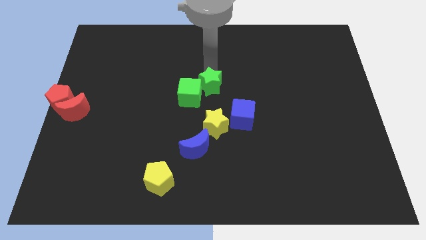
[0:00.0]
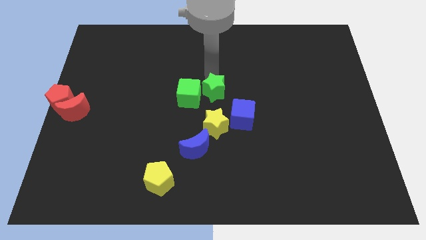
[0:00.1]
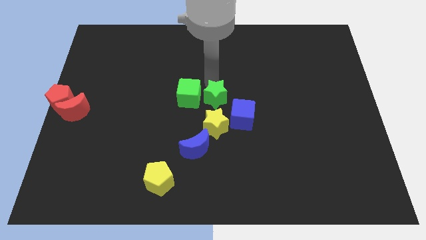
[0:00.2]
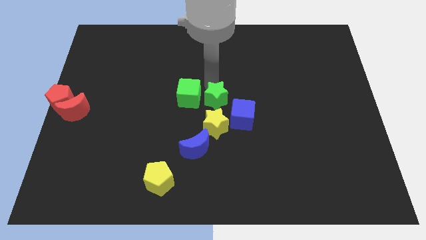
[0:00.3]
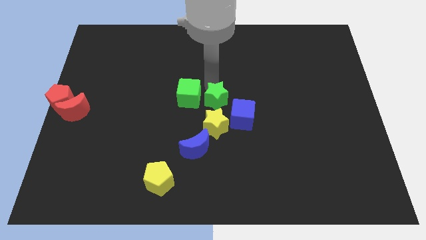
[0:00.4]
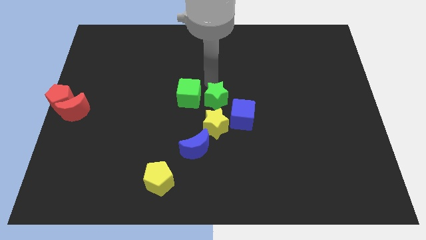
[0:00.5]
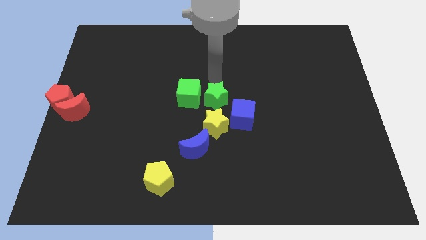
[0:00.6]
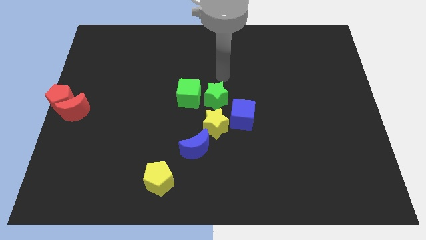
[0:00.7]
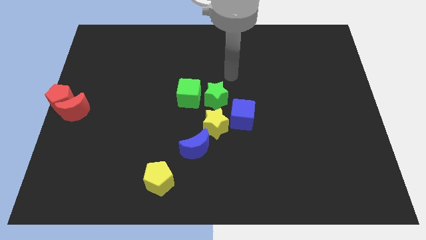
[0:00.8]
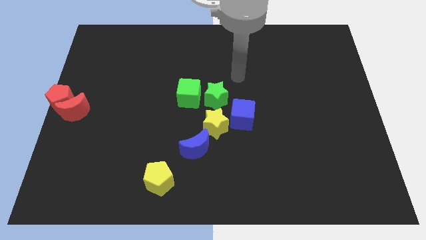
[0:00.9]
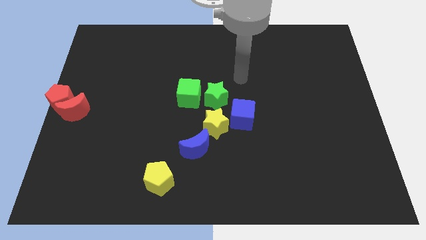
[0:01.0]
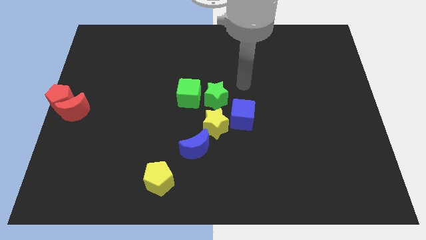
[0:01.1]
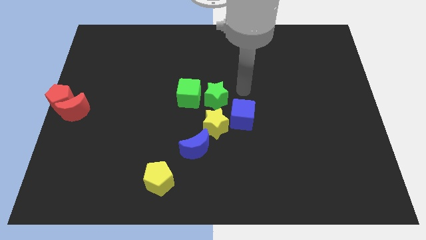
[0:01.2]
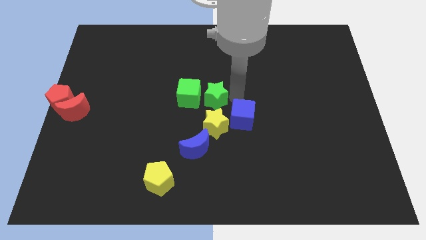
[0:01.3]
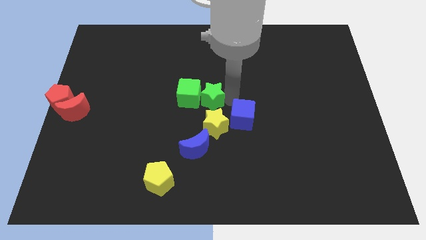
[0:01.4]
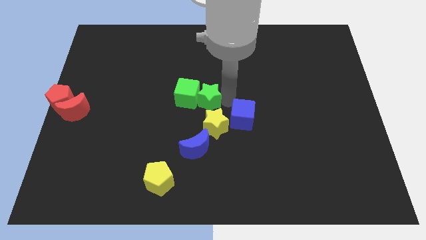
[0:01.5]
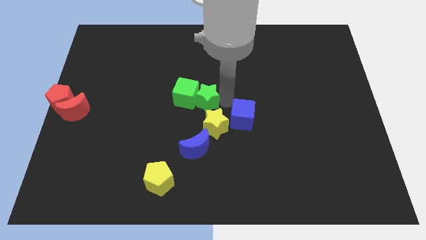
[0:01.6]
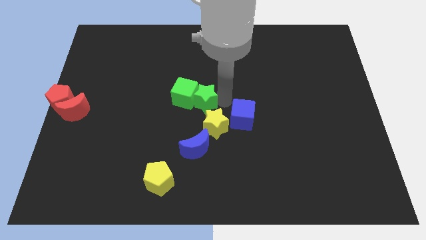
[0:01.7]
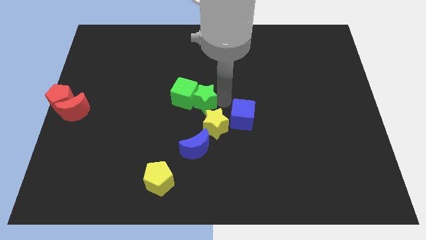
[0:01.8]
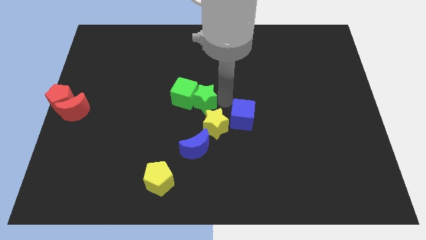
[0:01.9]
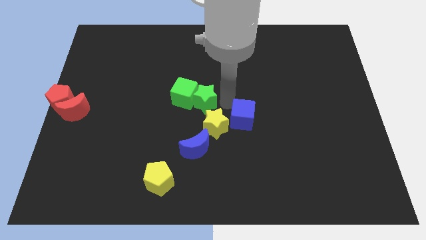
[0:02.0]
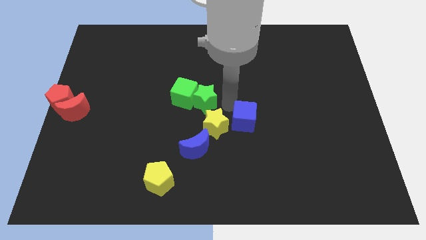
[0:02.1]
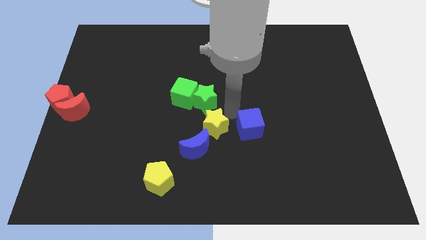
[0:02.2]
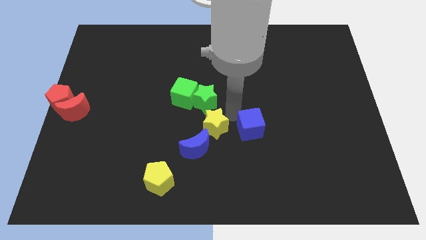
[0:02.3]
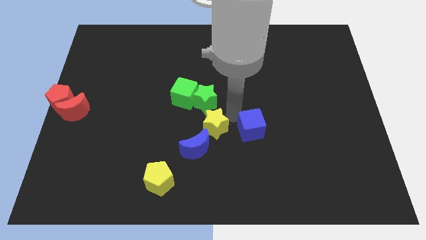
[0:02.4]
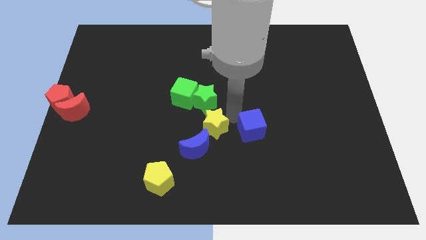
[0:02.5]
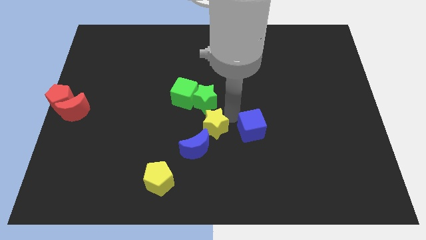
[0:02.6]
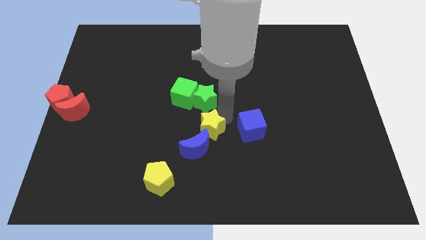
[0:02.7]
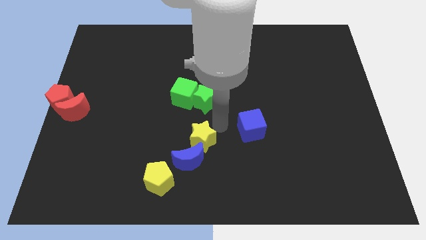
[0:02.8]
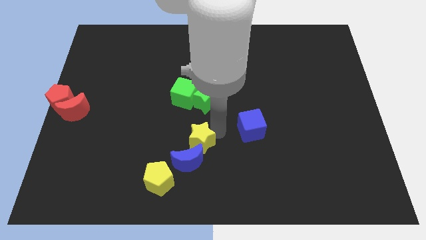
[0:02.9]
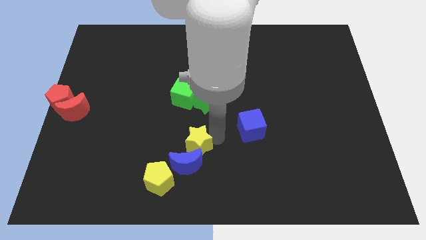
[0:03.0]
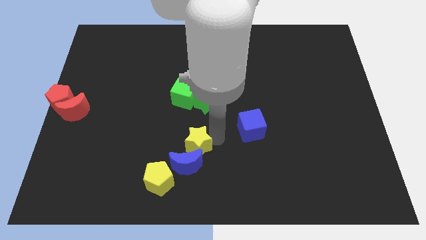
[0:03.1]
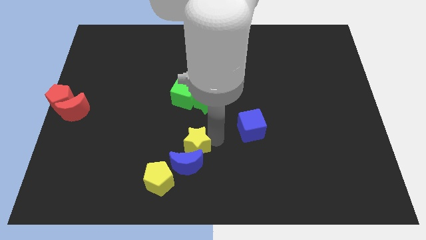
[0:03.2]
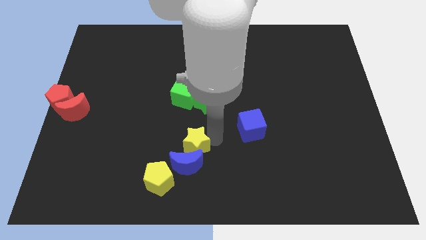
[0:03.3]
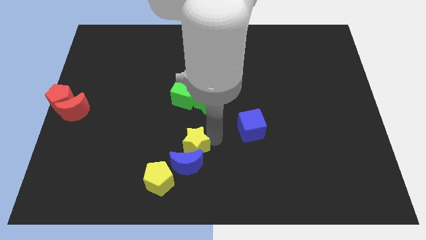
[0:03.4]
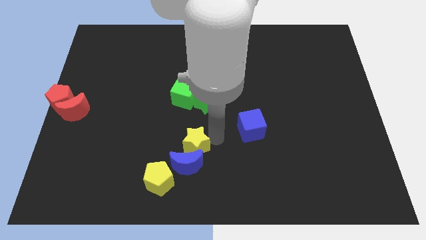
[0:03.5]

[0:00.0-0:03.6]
push the yellow star into the blue moon

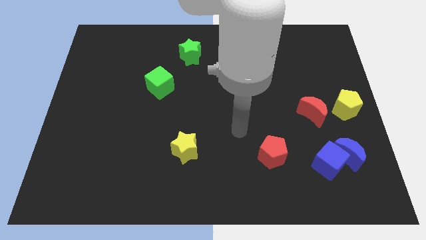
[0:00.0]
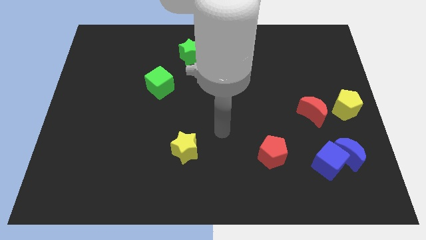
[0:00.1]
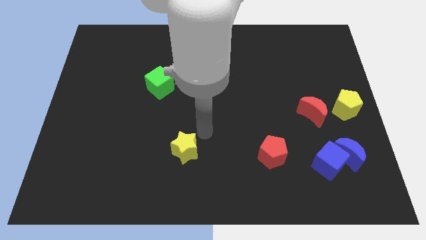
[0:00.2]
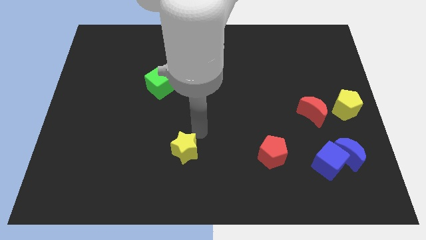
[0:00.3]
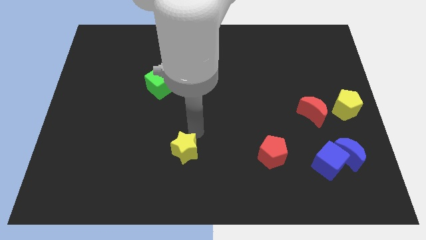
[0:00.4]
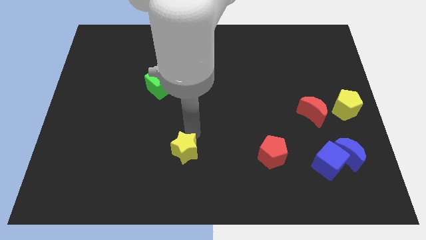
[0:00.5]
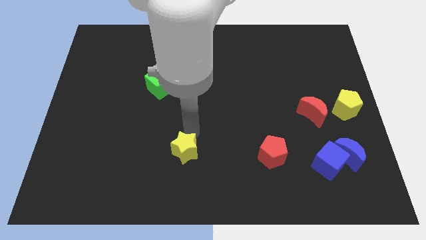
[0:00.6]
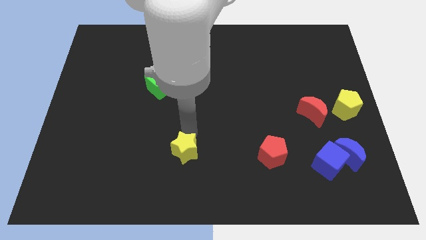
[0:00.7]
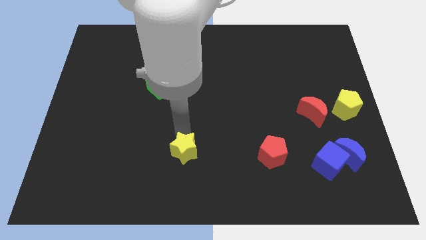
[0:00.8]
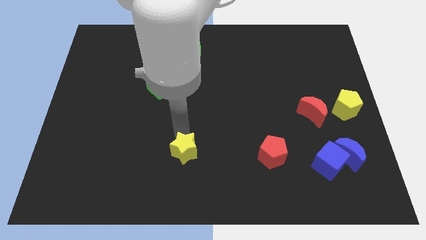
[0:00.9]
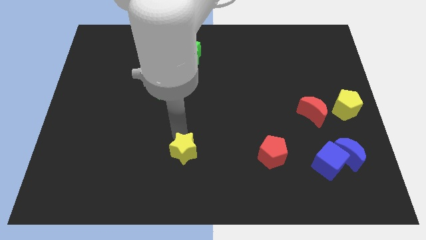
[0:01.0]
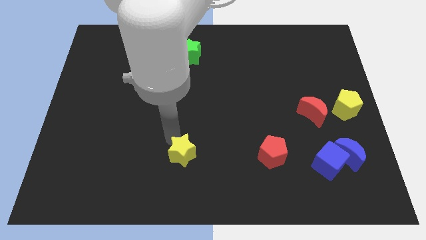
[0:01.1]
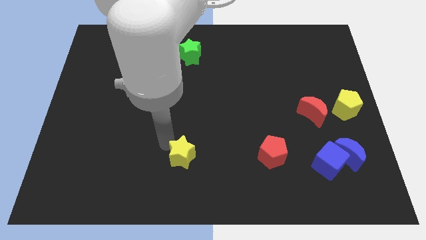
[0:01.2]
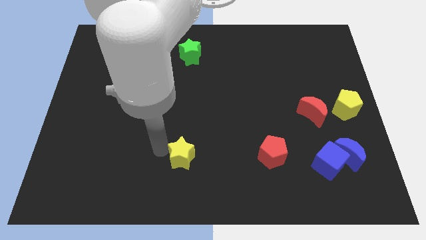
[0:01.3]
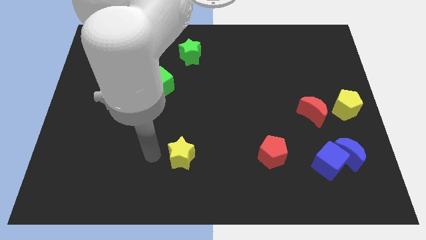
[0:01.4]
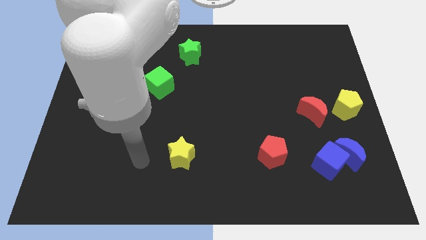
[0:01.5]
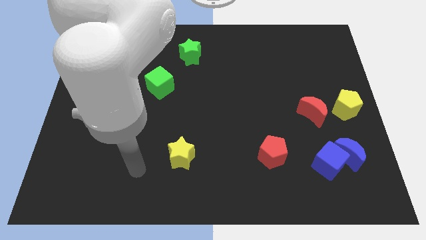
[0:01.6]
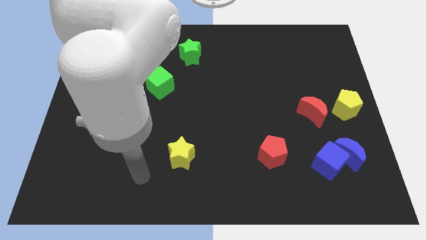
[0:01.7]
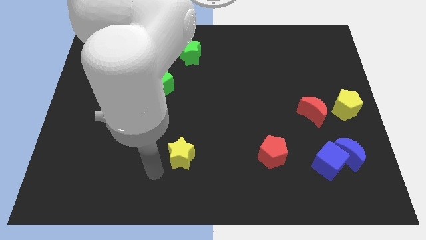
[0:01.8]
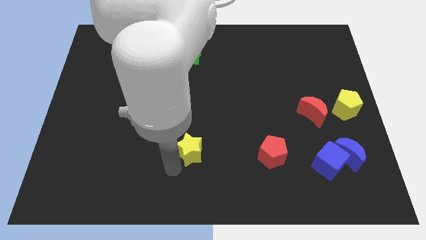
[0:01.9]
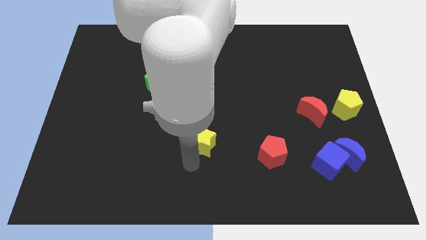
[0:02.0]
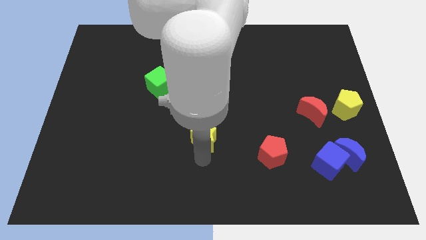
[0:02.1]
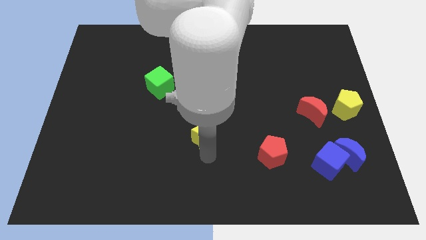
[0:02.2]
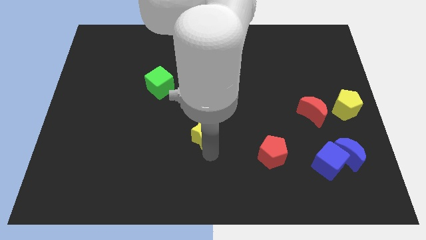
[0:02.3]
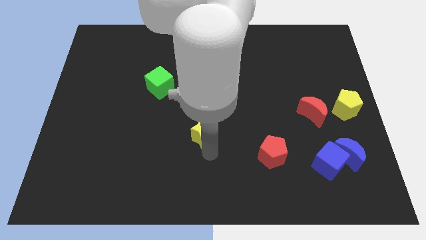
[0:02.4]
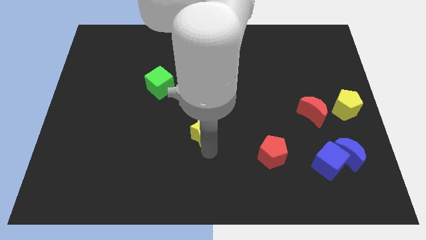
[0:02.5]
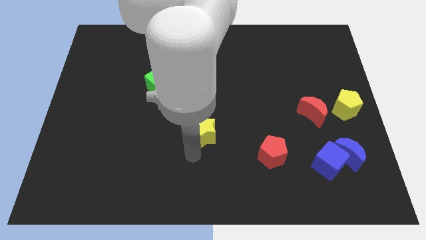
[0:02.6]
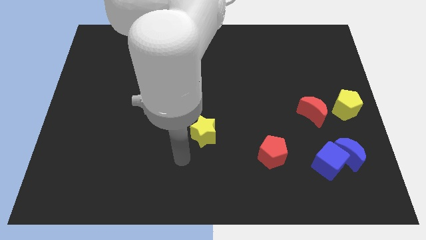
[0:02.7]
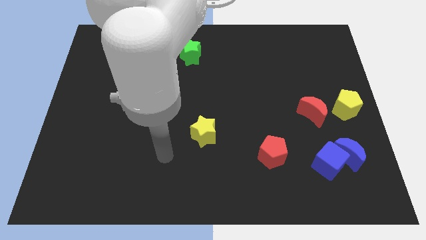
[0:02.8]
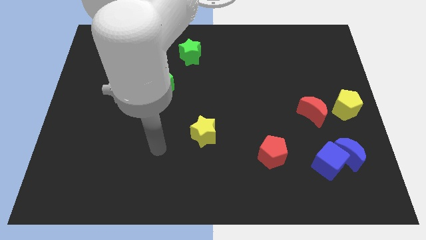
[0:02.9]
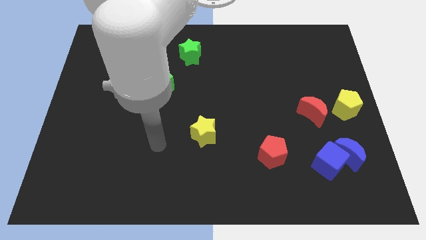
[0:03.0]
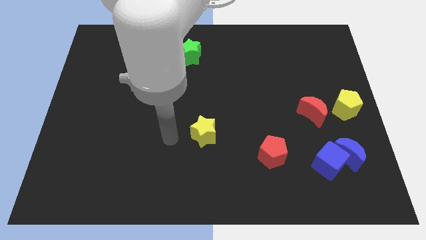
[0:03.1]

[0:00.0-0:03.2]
move the yellow star towards the top a bit

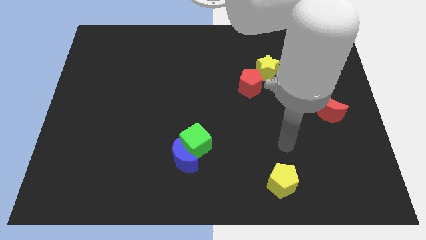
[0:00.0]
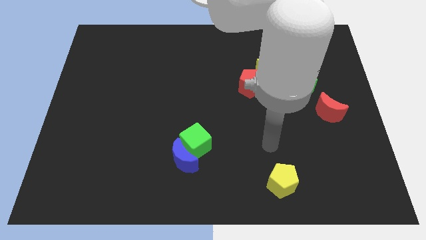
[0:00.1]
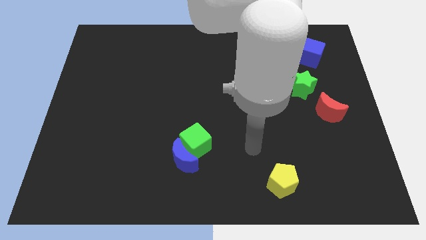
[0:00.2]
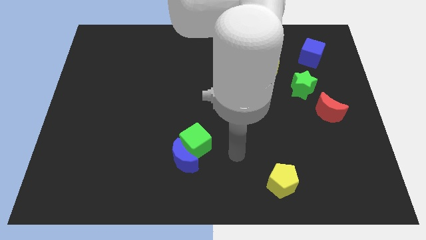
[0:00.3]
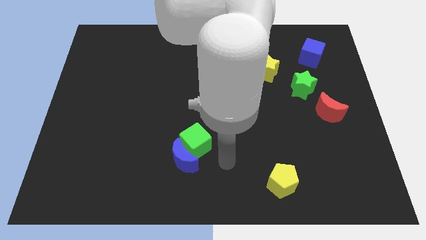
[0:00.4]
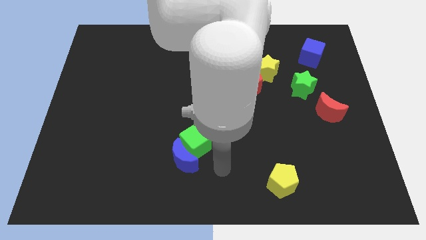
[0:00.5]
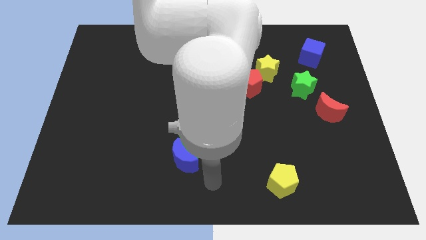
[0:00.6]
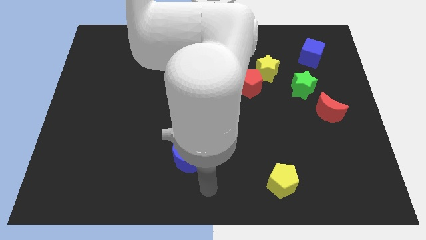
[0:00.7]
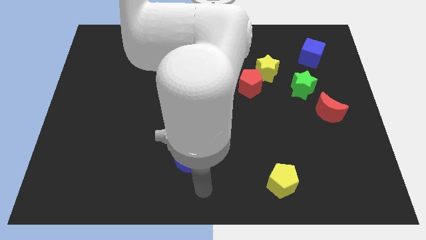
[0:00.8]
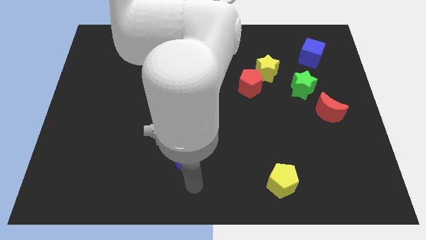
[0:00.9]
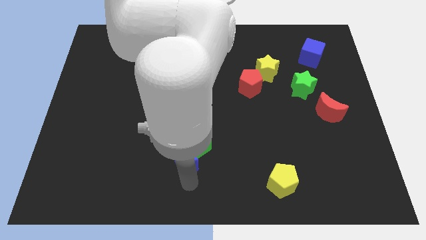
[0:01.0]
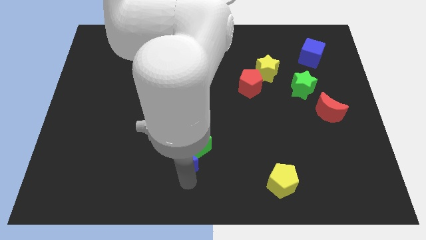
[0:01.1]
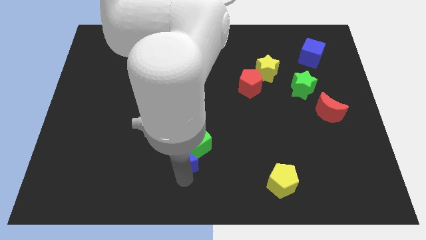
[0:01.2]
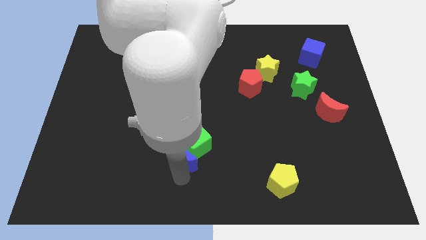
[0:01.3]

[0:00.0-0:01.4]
place arm at bottom of blue moon

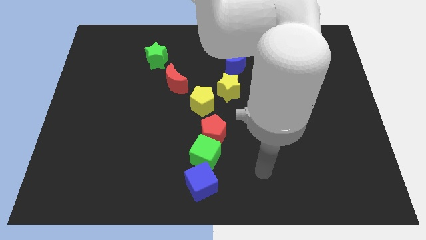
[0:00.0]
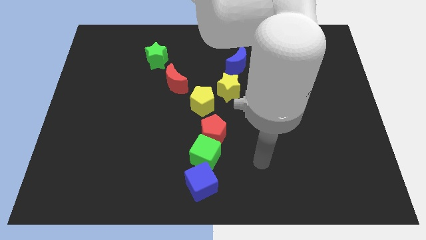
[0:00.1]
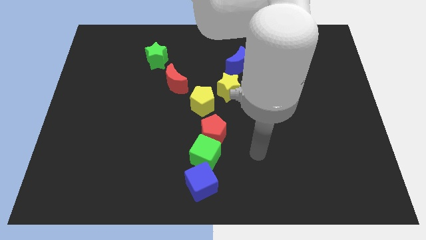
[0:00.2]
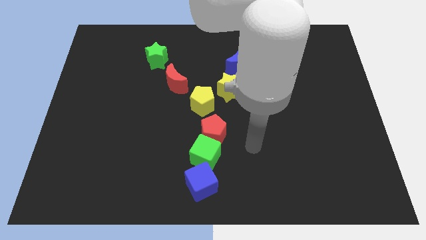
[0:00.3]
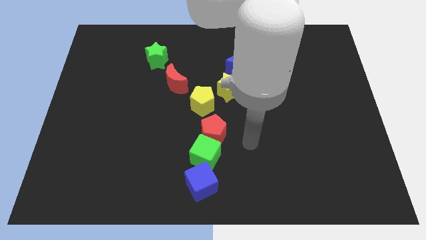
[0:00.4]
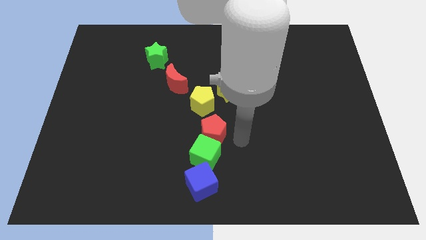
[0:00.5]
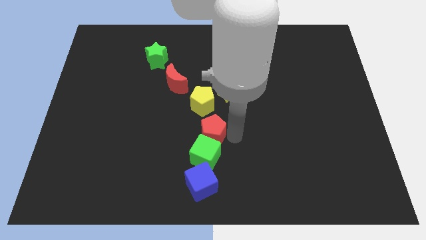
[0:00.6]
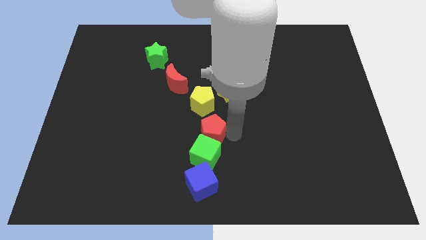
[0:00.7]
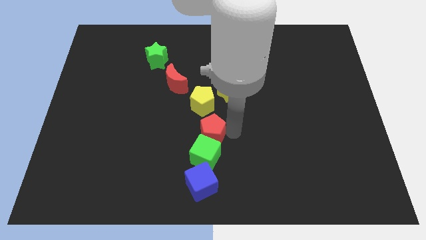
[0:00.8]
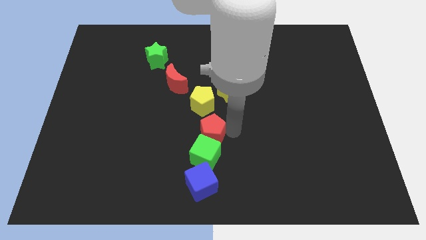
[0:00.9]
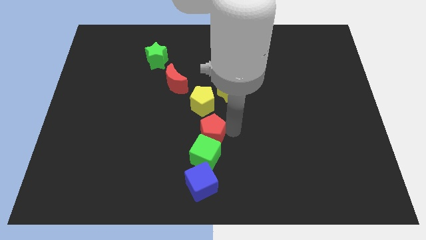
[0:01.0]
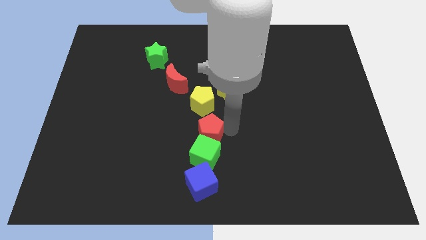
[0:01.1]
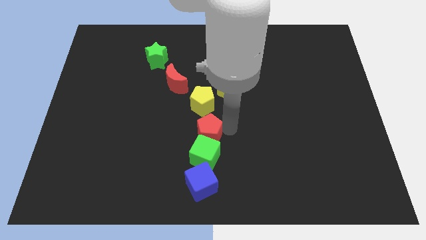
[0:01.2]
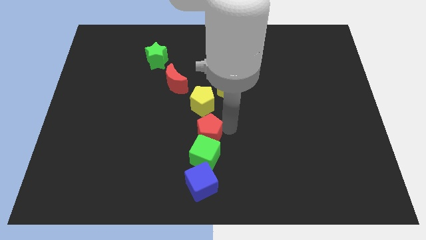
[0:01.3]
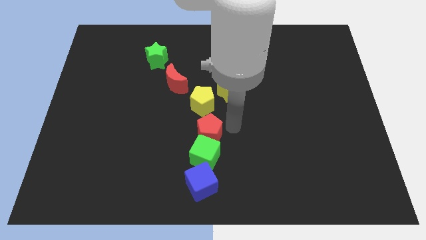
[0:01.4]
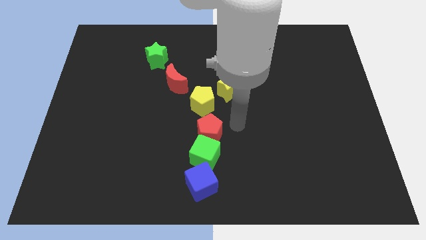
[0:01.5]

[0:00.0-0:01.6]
move the red pentagon slightly to the left
